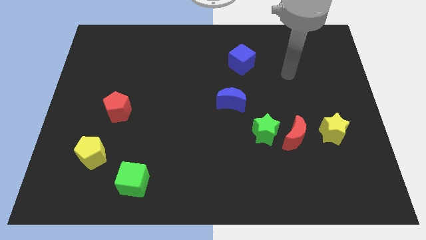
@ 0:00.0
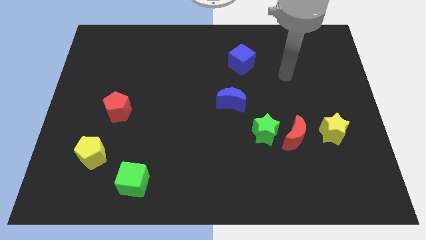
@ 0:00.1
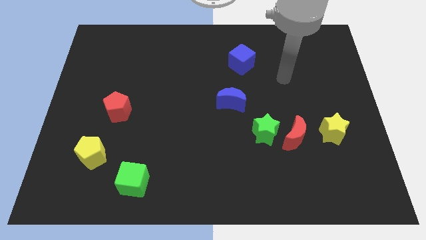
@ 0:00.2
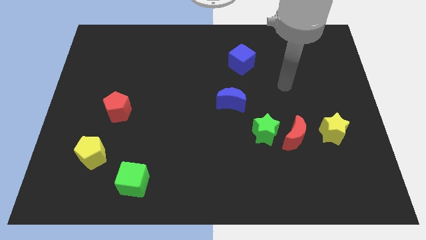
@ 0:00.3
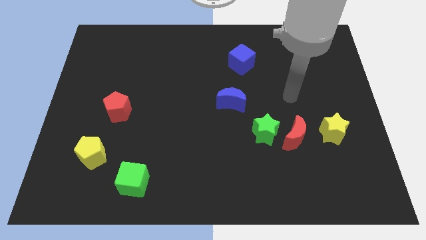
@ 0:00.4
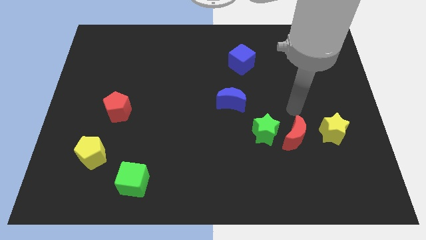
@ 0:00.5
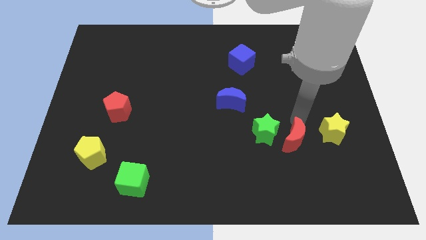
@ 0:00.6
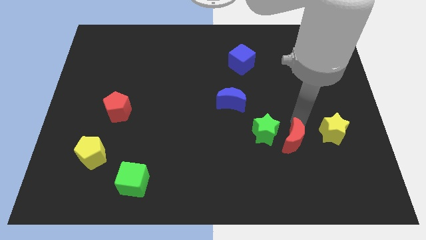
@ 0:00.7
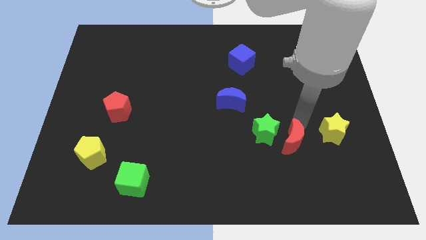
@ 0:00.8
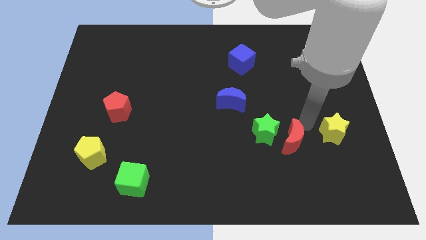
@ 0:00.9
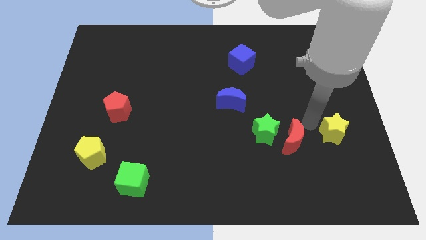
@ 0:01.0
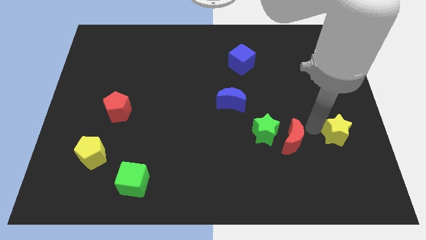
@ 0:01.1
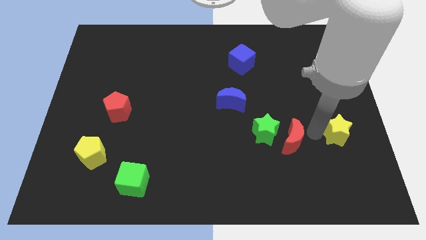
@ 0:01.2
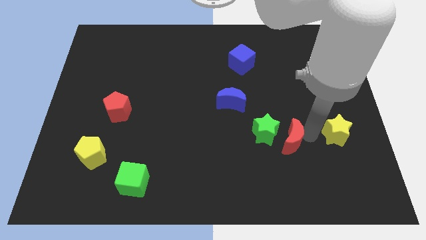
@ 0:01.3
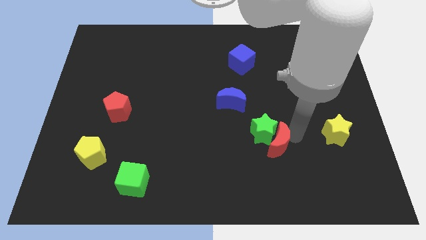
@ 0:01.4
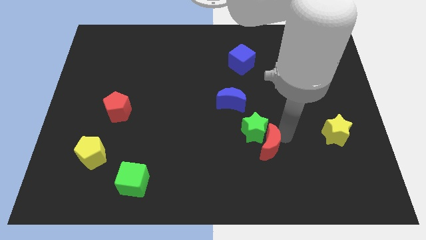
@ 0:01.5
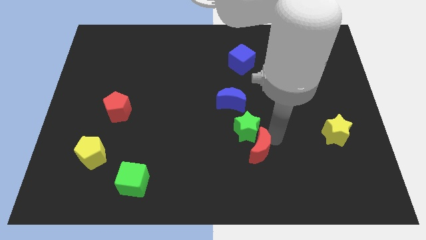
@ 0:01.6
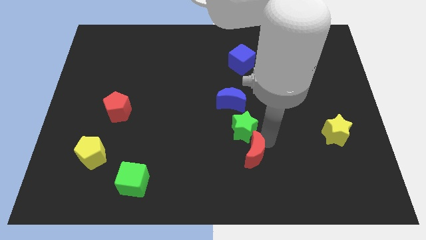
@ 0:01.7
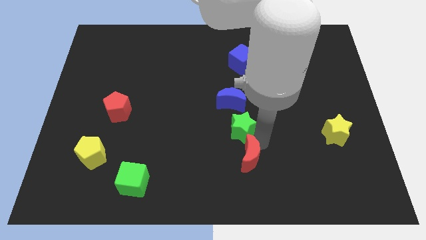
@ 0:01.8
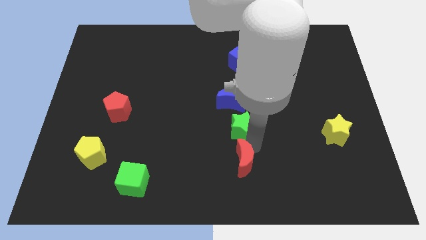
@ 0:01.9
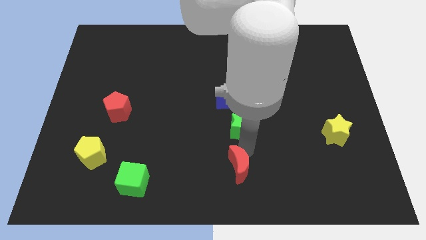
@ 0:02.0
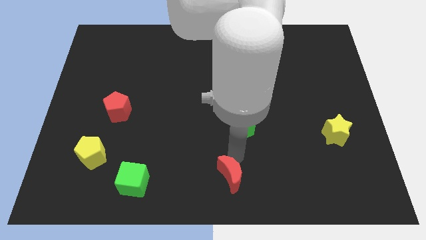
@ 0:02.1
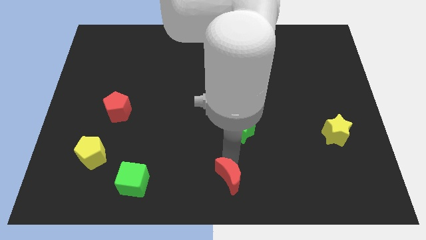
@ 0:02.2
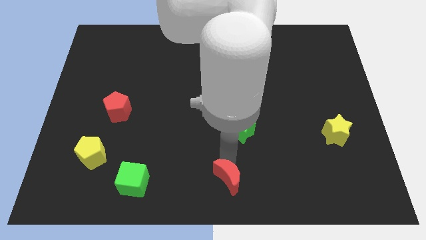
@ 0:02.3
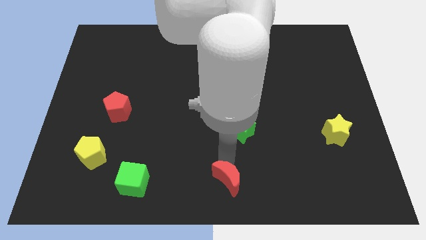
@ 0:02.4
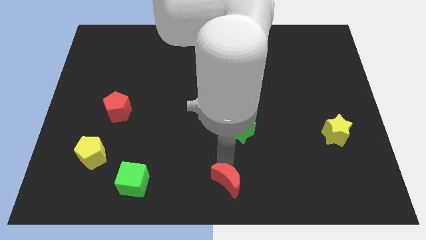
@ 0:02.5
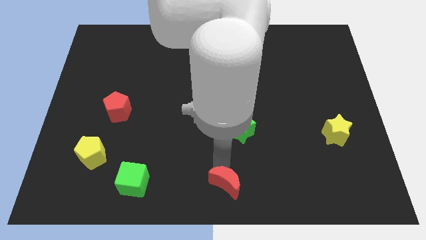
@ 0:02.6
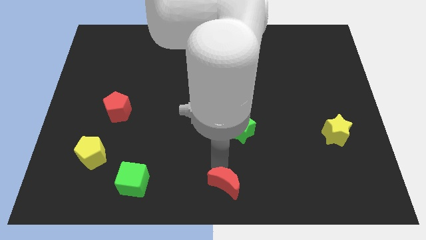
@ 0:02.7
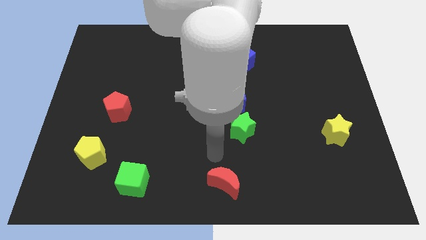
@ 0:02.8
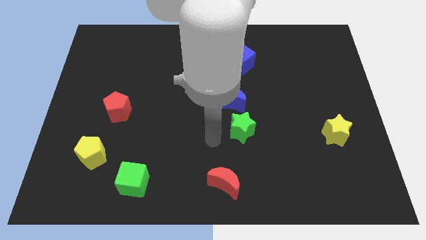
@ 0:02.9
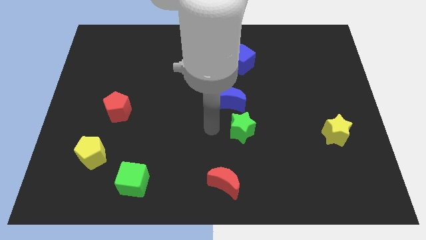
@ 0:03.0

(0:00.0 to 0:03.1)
slide the red moon to the right of the green cube

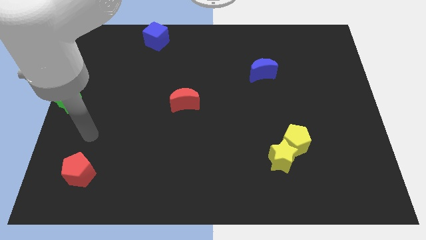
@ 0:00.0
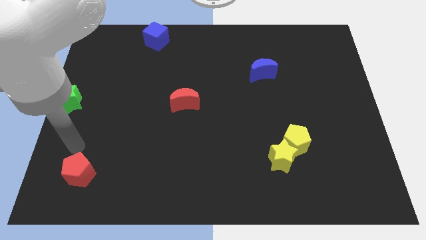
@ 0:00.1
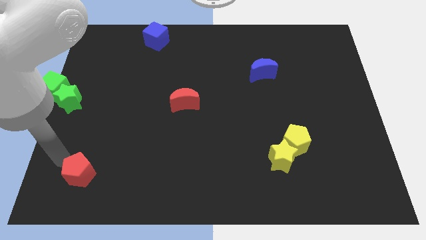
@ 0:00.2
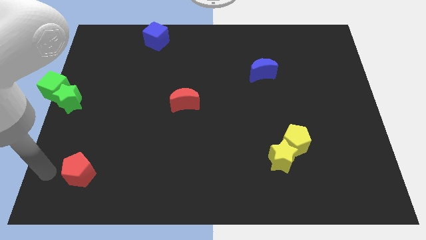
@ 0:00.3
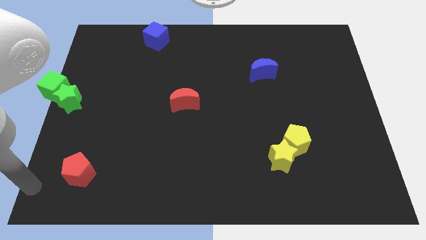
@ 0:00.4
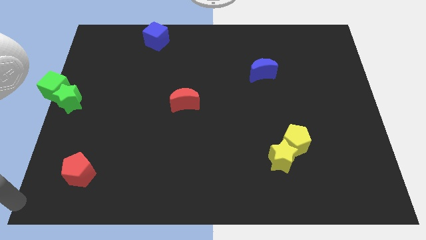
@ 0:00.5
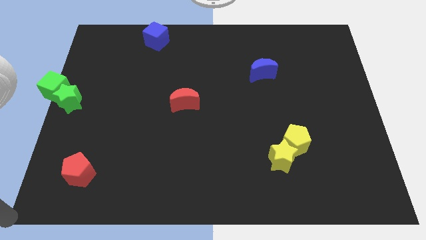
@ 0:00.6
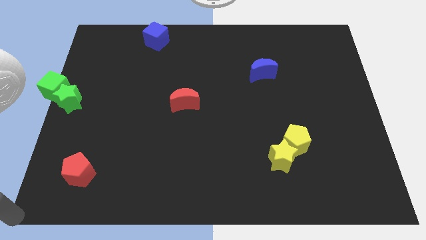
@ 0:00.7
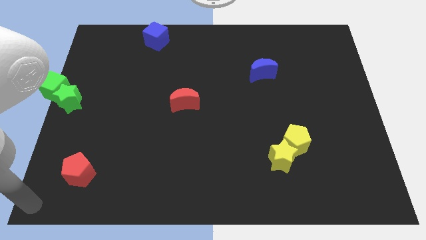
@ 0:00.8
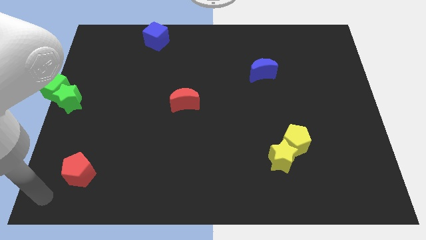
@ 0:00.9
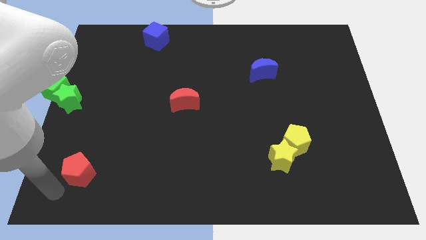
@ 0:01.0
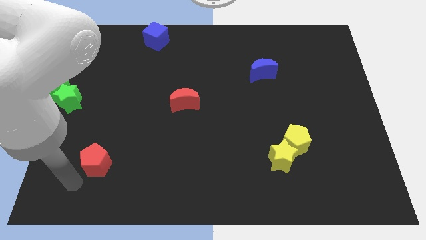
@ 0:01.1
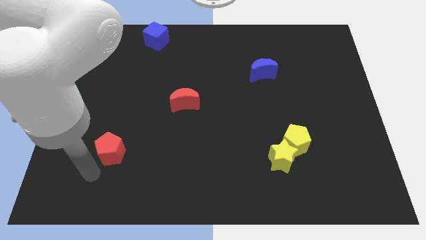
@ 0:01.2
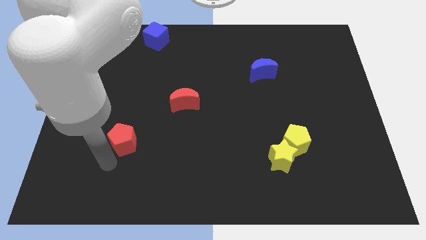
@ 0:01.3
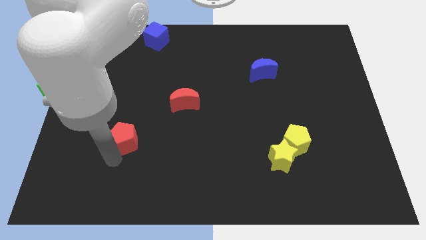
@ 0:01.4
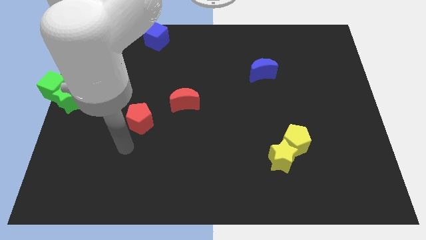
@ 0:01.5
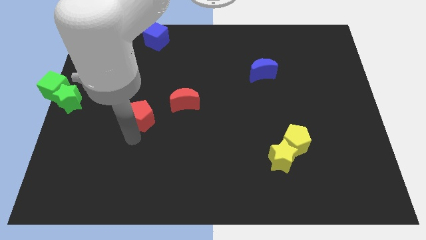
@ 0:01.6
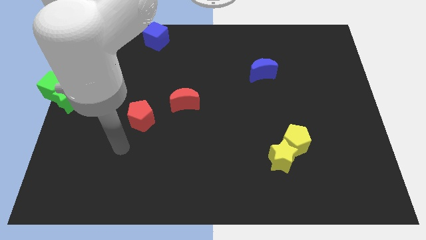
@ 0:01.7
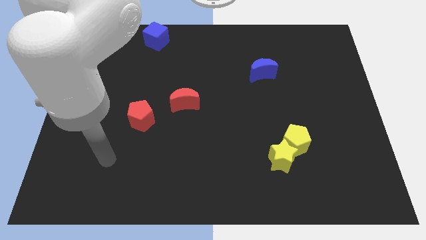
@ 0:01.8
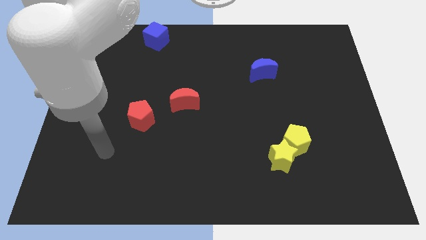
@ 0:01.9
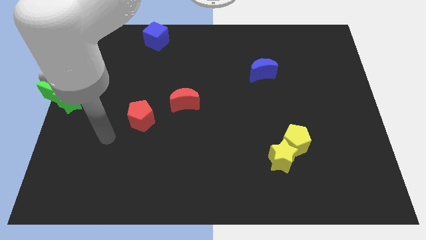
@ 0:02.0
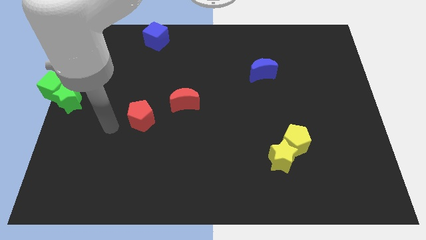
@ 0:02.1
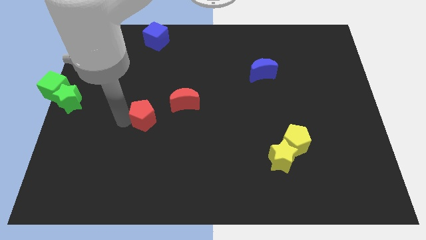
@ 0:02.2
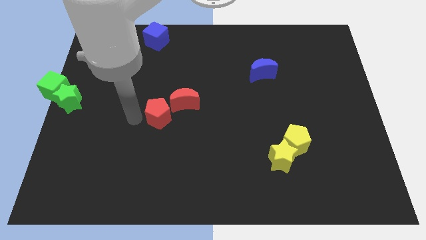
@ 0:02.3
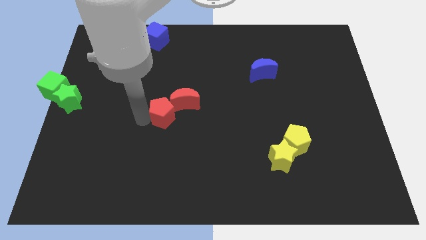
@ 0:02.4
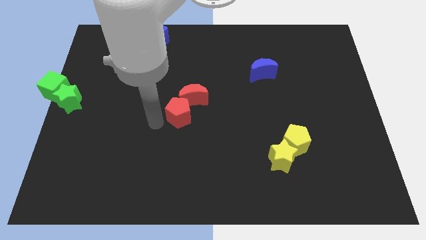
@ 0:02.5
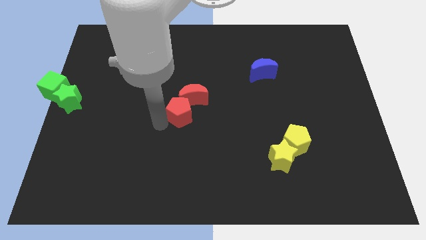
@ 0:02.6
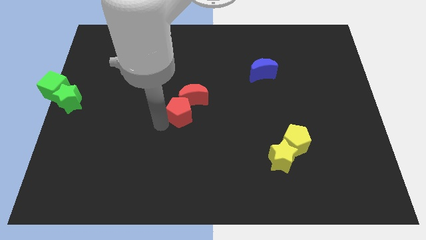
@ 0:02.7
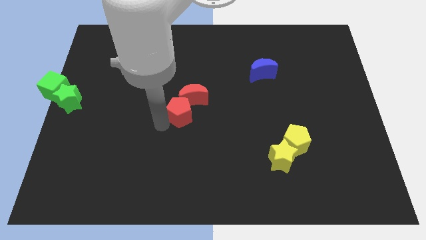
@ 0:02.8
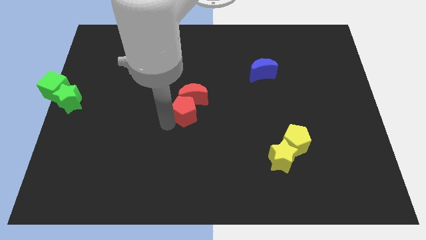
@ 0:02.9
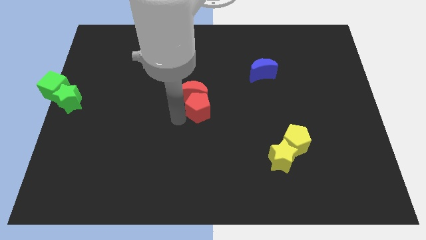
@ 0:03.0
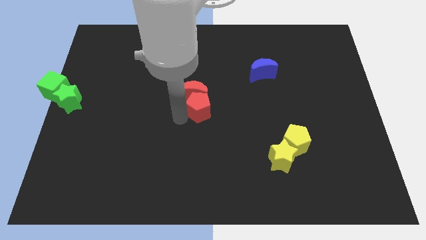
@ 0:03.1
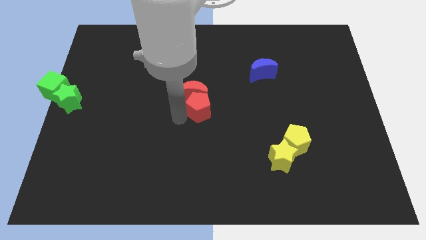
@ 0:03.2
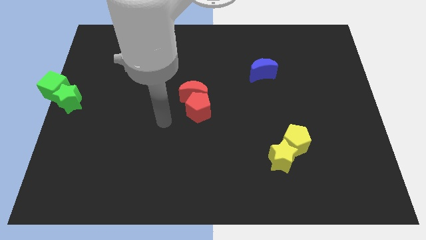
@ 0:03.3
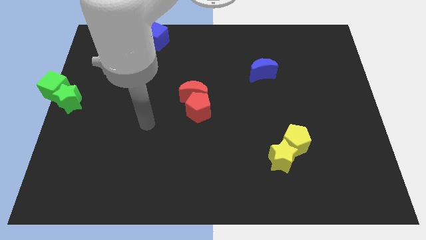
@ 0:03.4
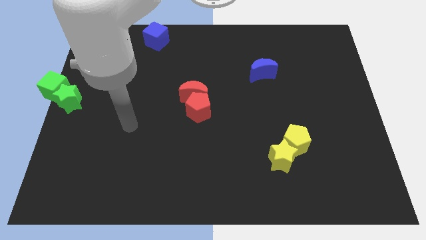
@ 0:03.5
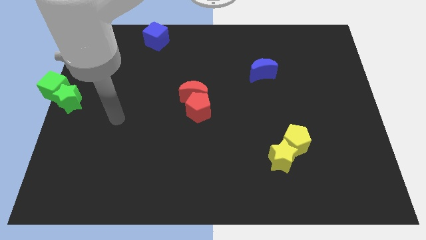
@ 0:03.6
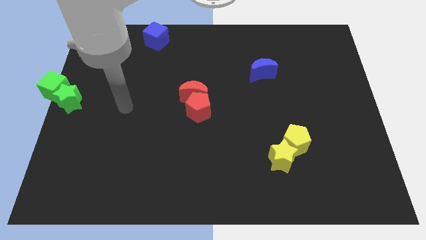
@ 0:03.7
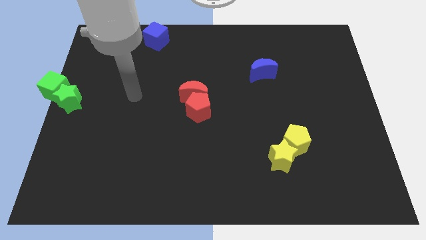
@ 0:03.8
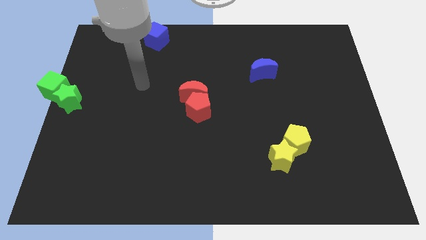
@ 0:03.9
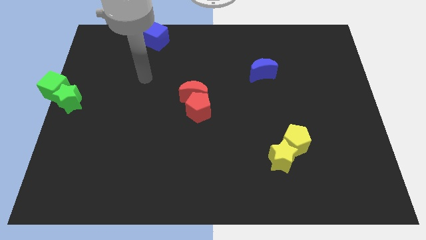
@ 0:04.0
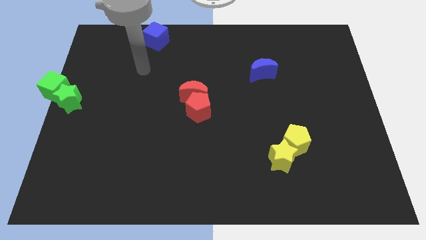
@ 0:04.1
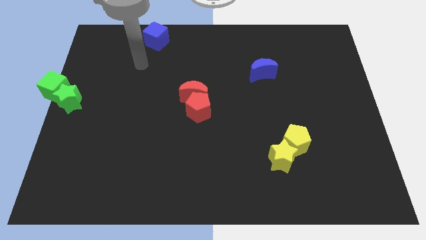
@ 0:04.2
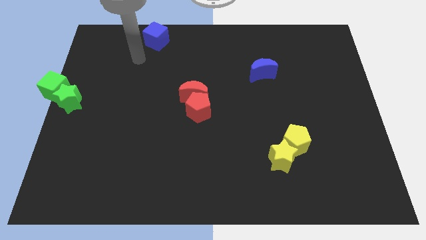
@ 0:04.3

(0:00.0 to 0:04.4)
push red pentagon into the red moon

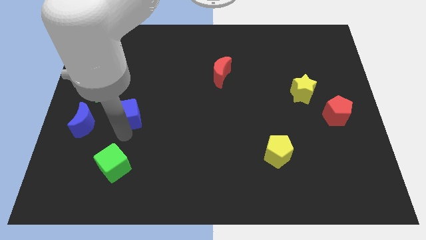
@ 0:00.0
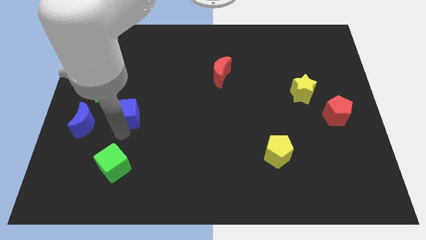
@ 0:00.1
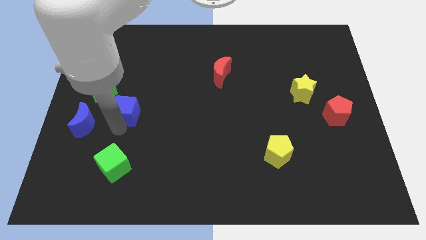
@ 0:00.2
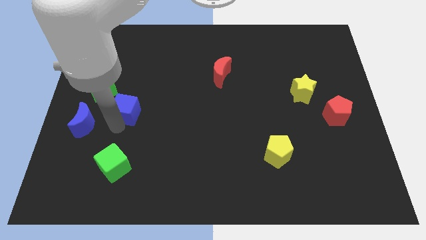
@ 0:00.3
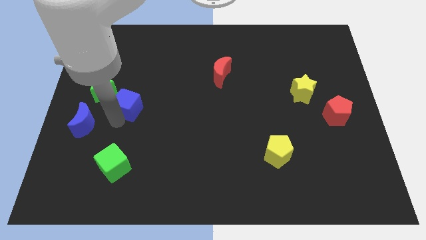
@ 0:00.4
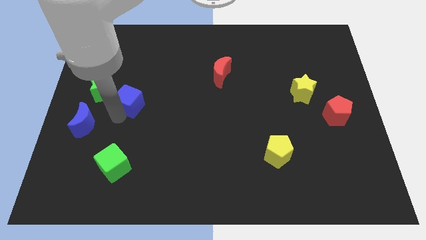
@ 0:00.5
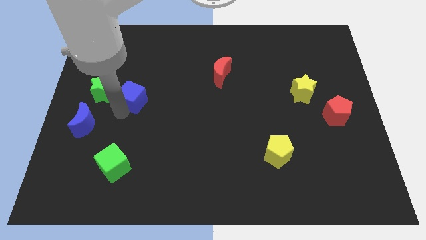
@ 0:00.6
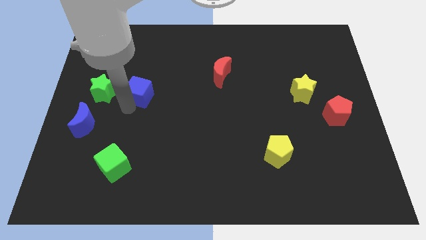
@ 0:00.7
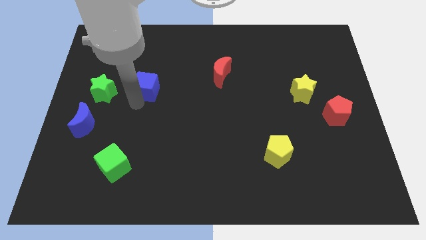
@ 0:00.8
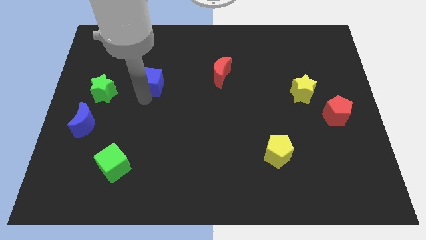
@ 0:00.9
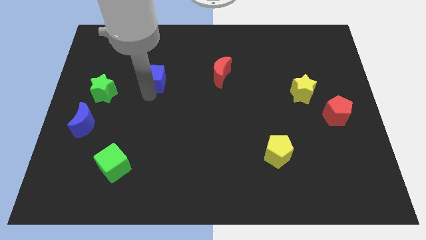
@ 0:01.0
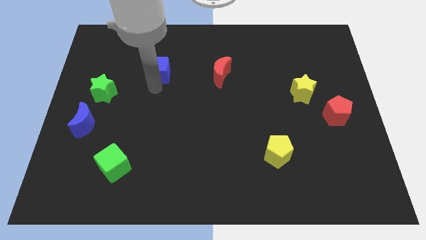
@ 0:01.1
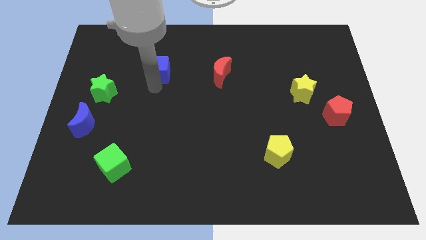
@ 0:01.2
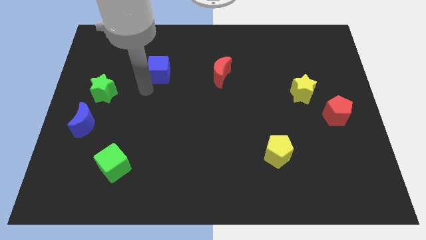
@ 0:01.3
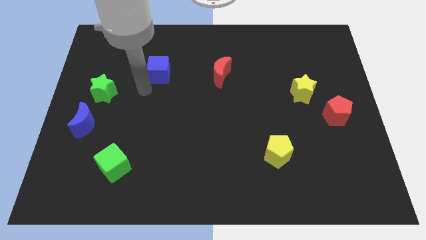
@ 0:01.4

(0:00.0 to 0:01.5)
place blue cube to the left of red moon
